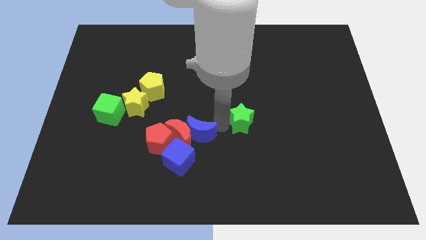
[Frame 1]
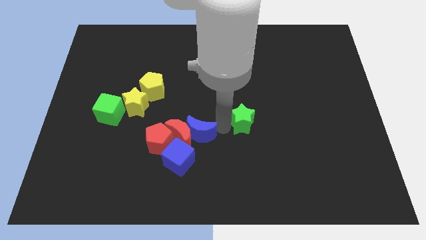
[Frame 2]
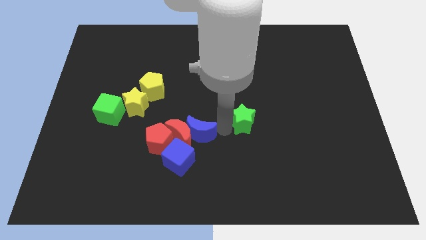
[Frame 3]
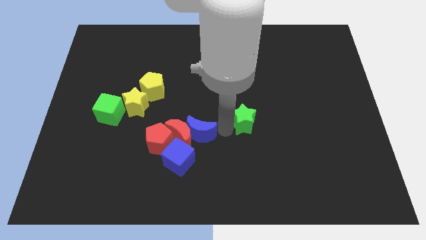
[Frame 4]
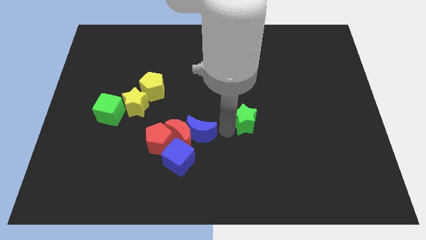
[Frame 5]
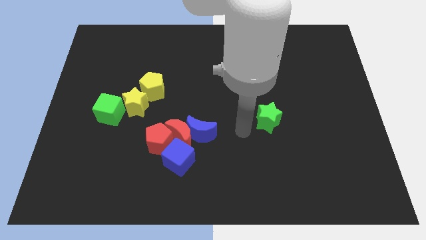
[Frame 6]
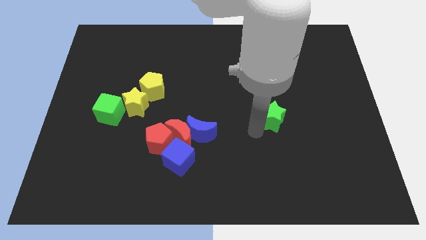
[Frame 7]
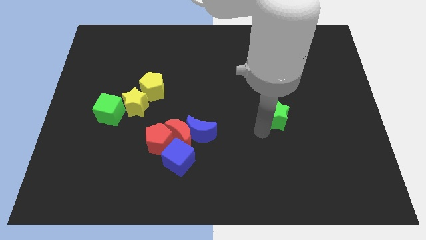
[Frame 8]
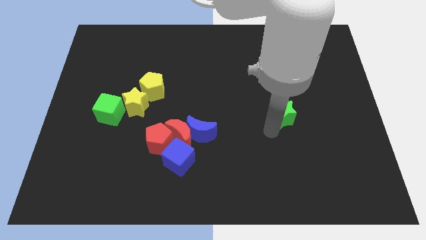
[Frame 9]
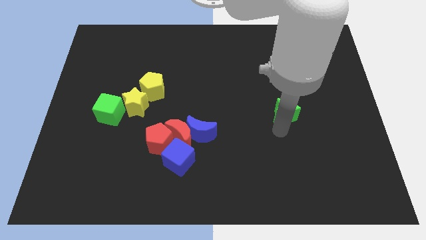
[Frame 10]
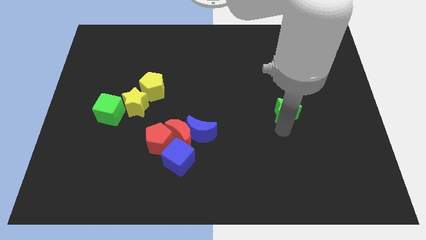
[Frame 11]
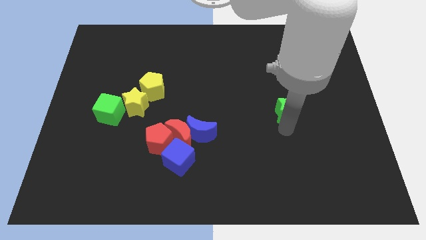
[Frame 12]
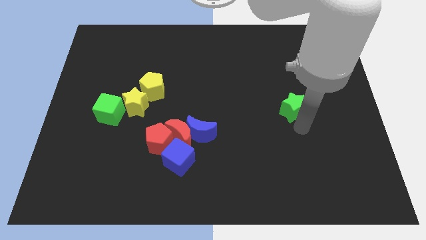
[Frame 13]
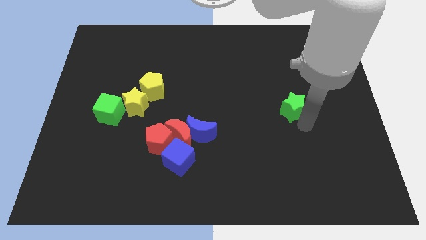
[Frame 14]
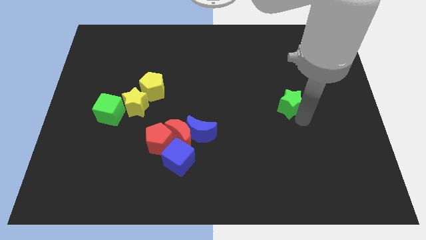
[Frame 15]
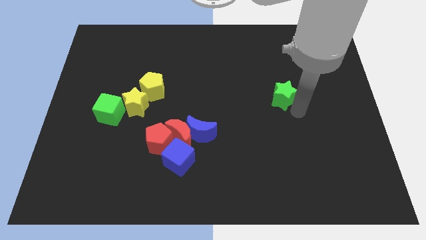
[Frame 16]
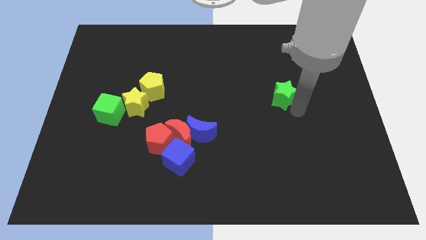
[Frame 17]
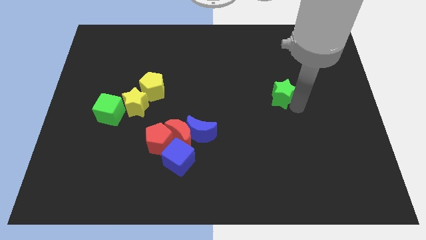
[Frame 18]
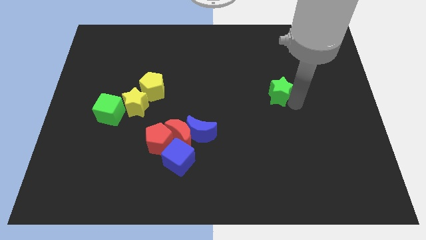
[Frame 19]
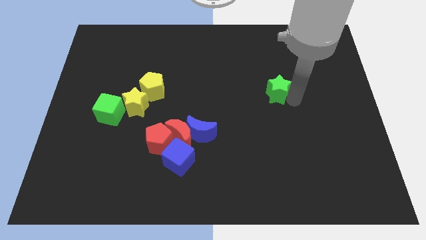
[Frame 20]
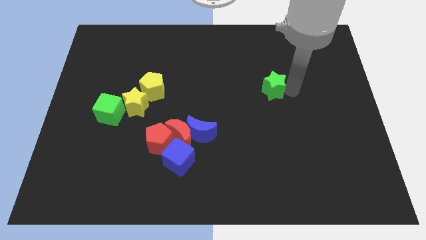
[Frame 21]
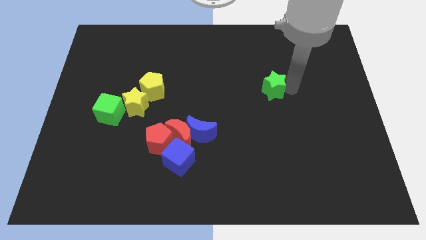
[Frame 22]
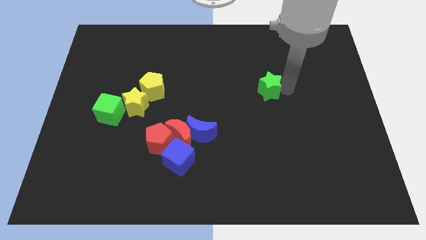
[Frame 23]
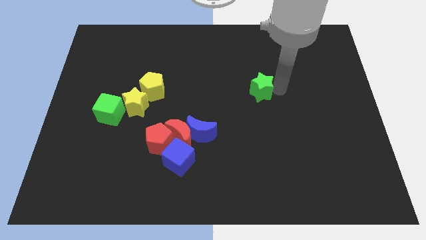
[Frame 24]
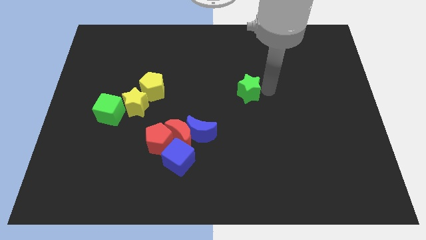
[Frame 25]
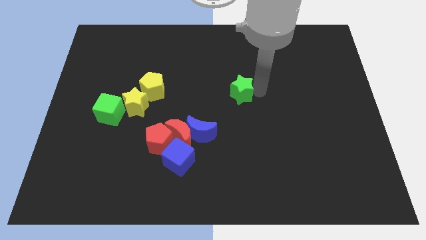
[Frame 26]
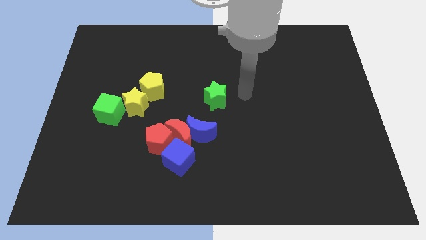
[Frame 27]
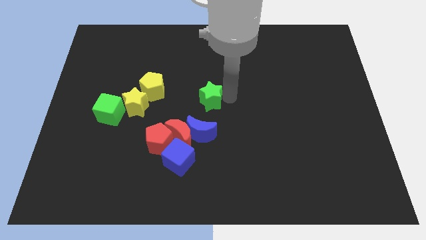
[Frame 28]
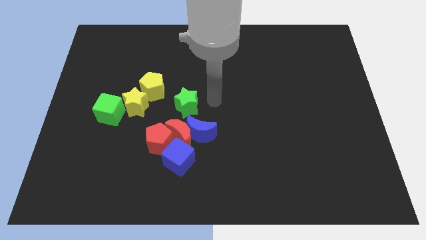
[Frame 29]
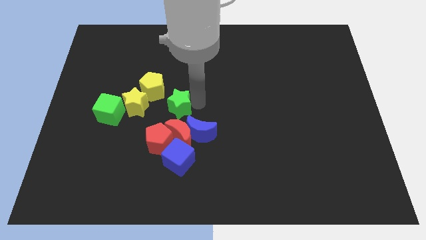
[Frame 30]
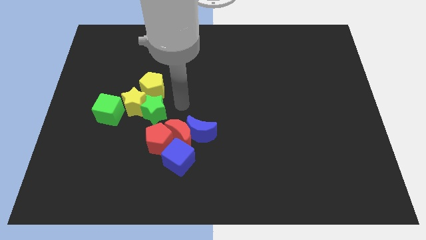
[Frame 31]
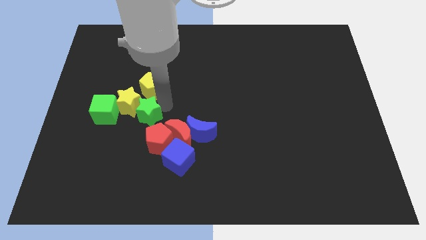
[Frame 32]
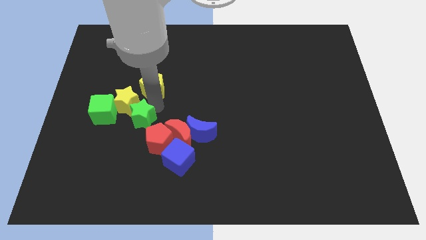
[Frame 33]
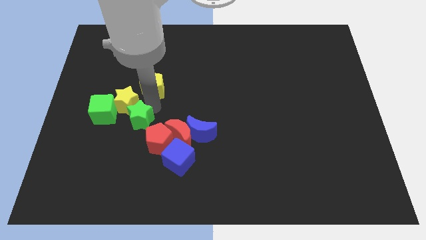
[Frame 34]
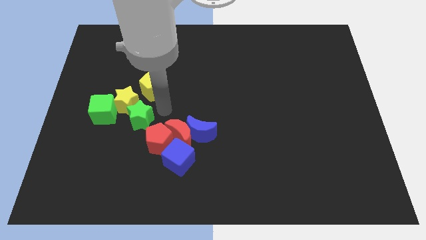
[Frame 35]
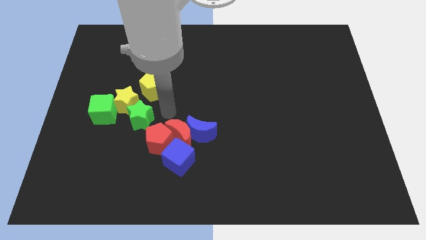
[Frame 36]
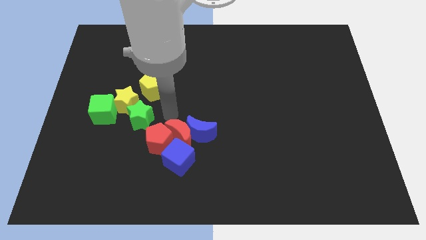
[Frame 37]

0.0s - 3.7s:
push the green star into the bottom of the yellow star

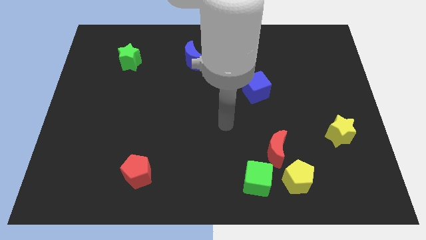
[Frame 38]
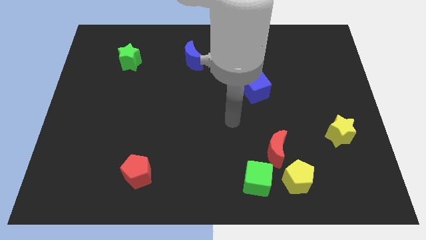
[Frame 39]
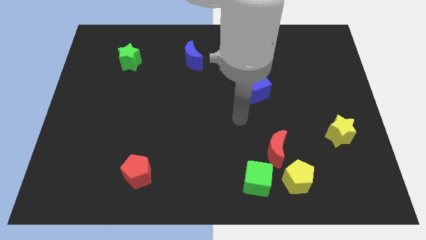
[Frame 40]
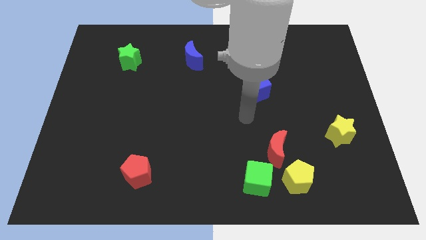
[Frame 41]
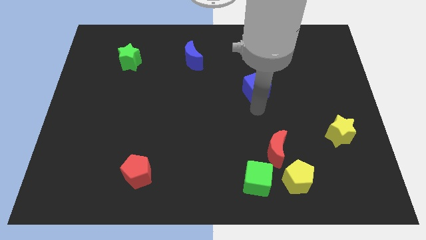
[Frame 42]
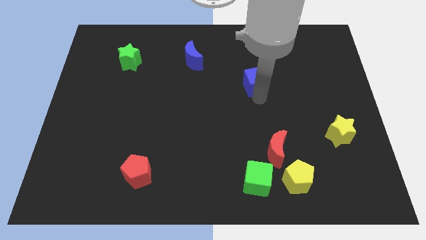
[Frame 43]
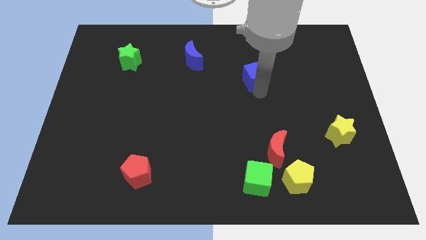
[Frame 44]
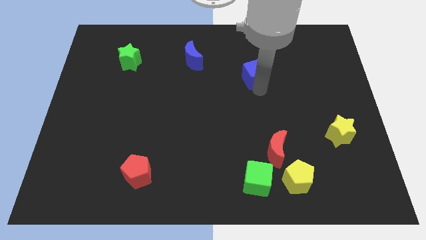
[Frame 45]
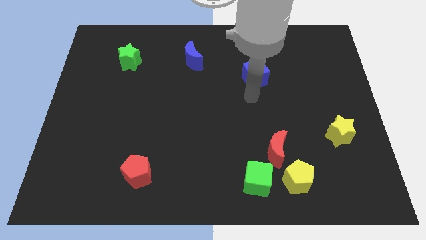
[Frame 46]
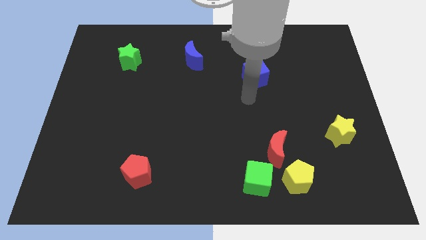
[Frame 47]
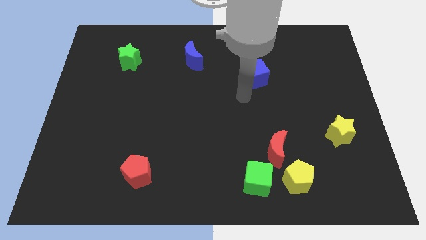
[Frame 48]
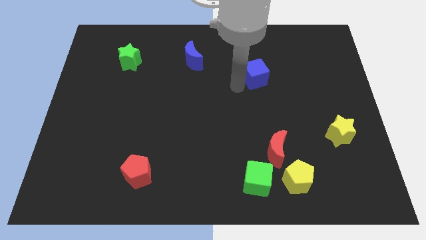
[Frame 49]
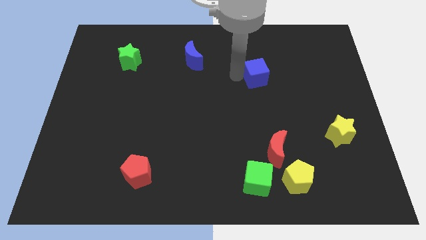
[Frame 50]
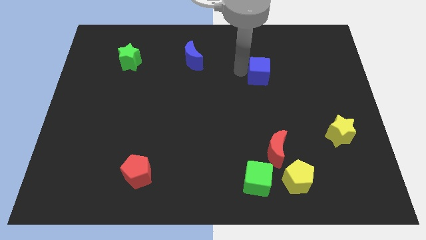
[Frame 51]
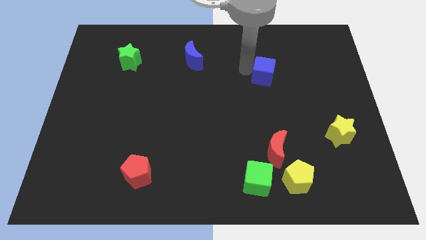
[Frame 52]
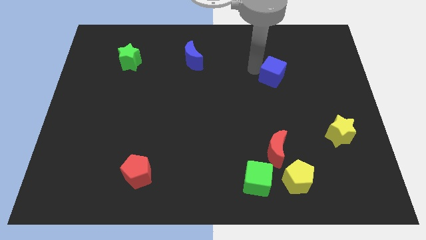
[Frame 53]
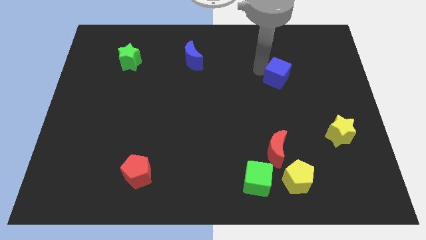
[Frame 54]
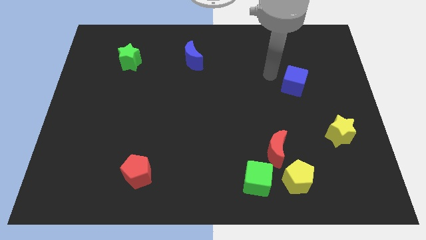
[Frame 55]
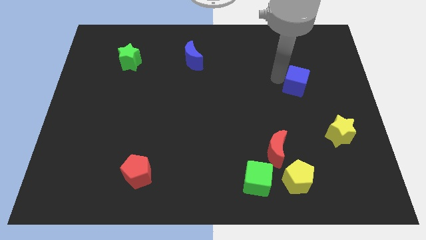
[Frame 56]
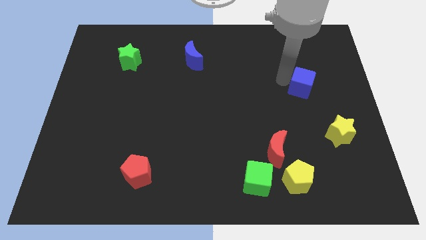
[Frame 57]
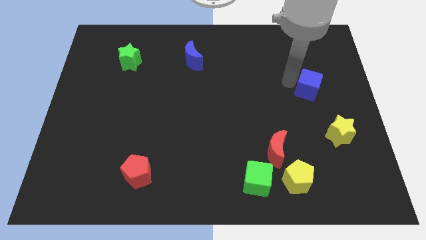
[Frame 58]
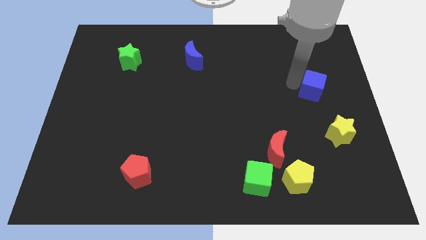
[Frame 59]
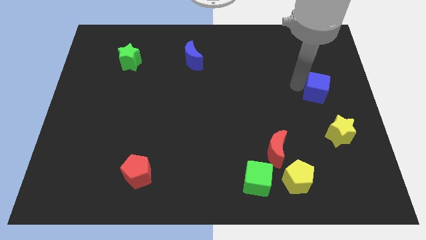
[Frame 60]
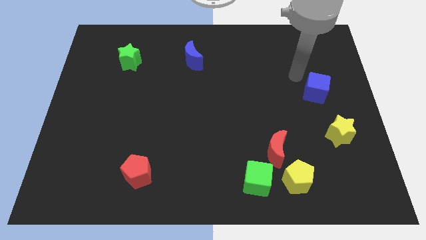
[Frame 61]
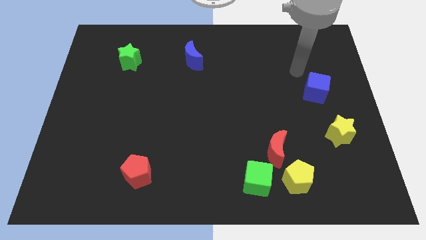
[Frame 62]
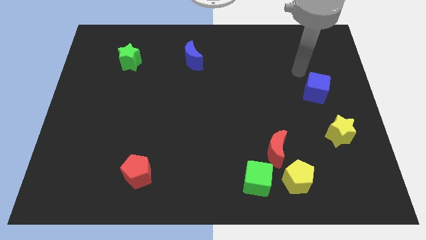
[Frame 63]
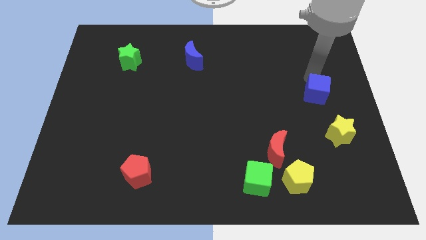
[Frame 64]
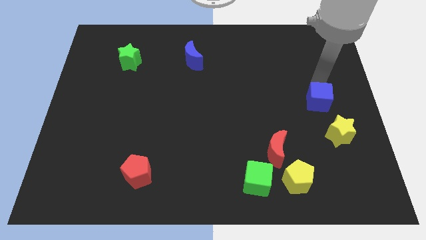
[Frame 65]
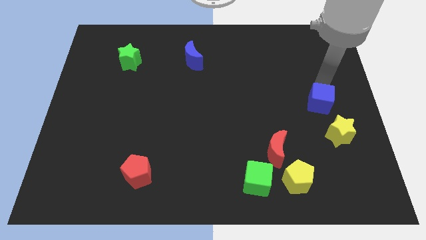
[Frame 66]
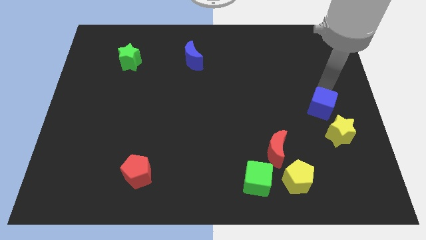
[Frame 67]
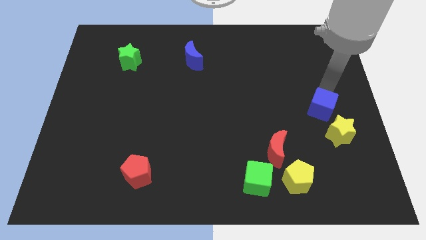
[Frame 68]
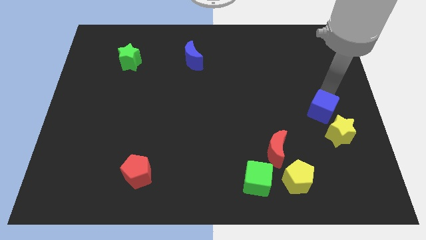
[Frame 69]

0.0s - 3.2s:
push the blue cube to the right side of the board

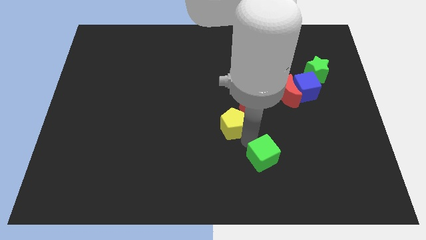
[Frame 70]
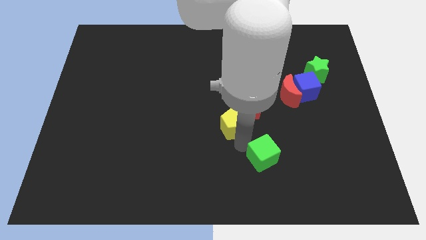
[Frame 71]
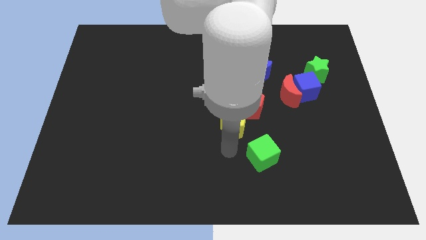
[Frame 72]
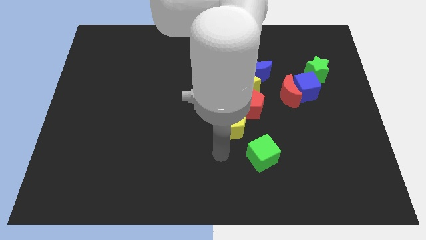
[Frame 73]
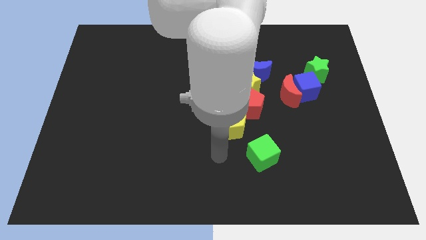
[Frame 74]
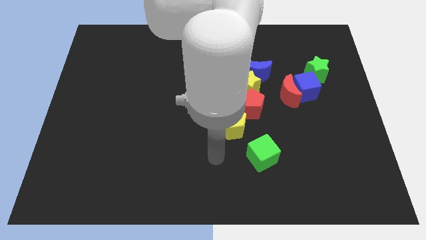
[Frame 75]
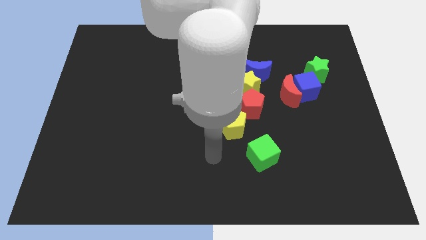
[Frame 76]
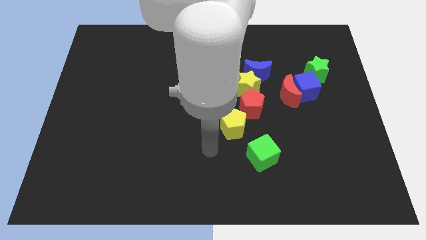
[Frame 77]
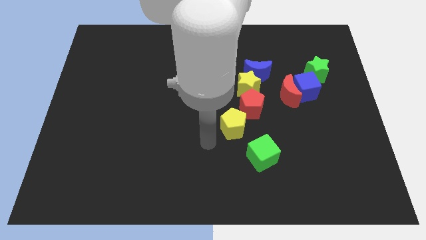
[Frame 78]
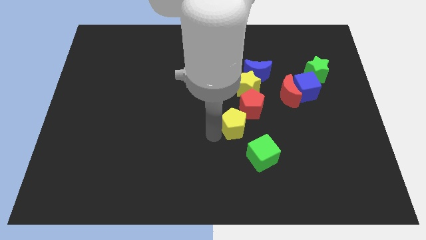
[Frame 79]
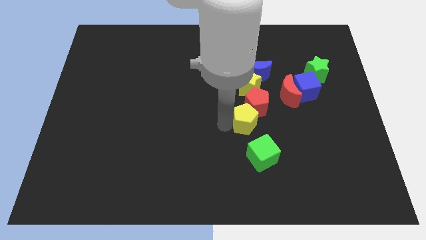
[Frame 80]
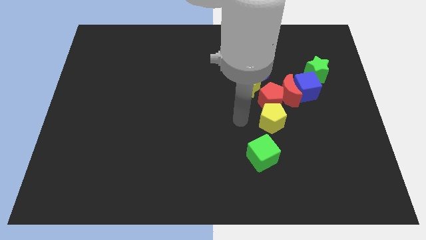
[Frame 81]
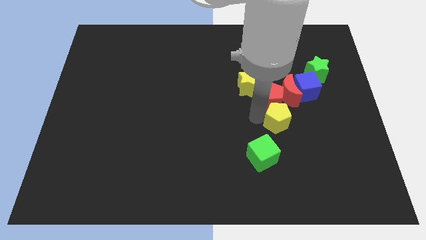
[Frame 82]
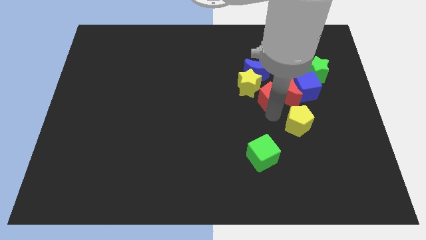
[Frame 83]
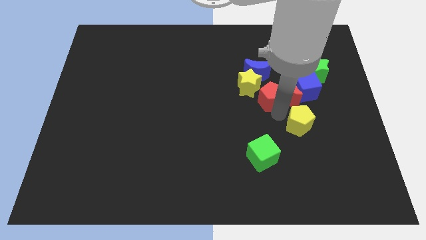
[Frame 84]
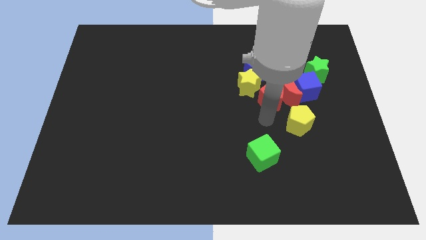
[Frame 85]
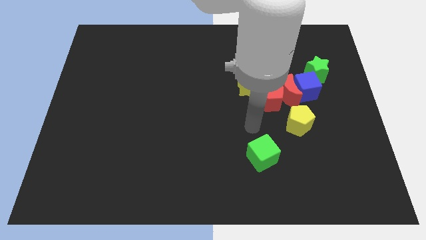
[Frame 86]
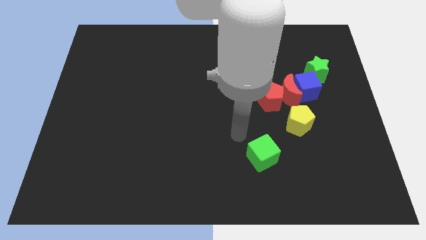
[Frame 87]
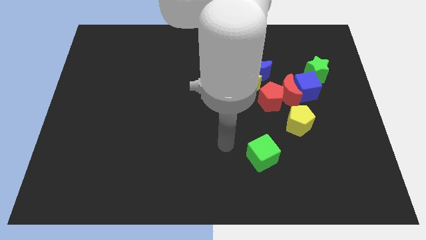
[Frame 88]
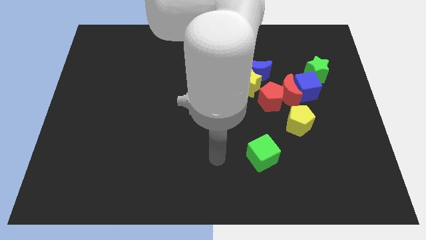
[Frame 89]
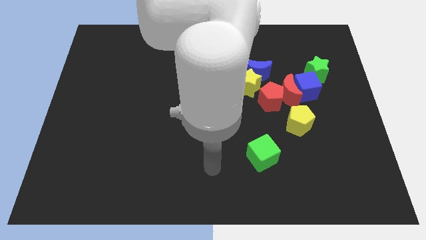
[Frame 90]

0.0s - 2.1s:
slide the yellow pentagon towards the center right of the table
